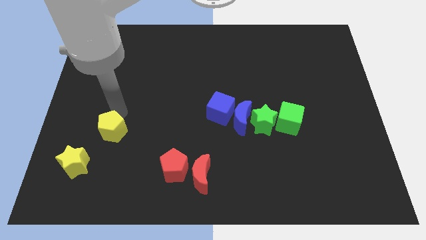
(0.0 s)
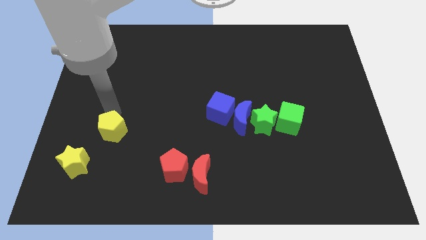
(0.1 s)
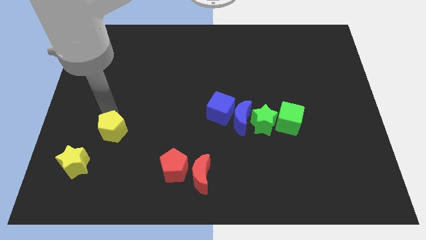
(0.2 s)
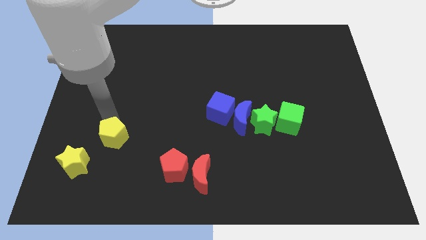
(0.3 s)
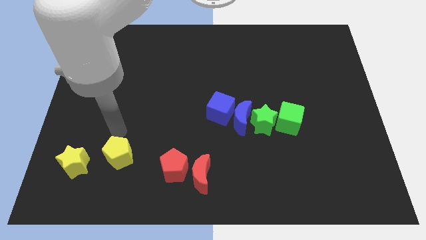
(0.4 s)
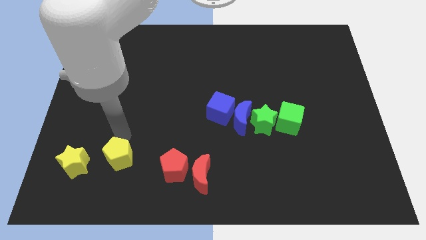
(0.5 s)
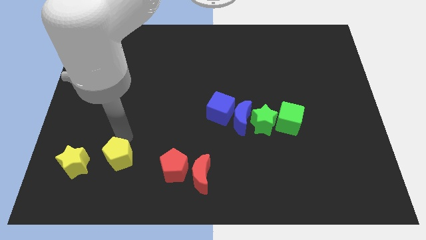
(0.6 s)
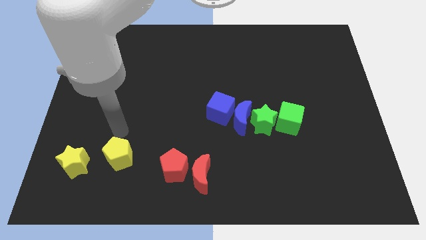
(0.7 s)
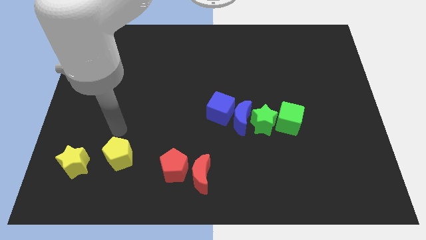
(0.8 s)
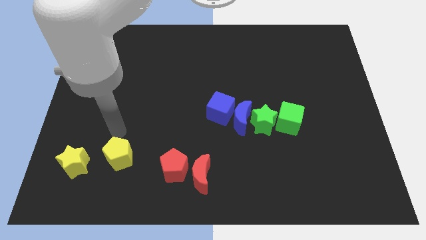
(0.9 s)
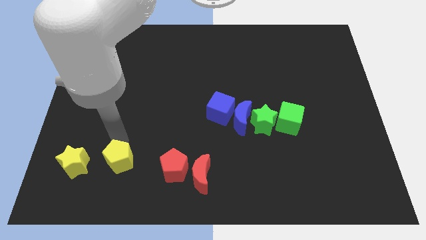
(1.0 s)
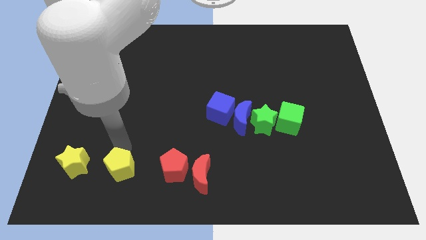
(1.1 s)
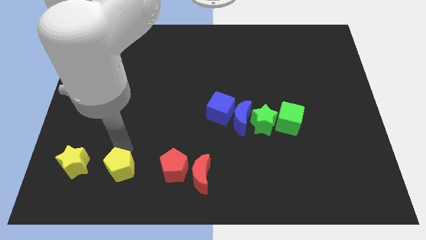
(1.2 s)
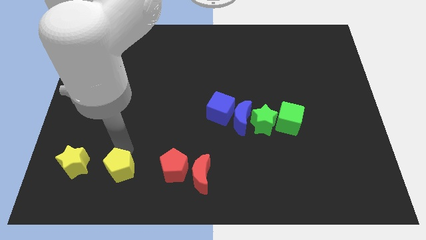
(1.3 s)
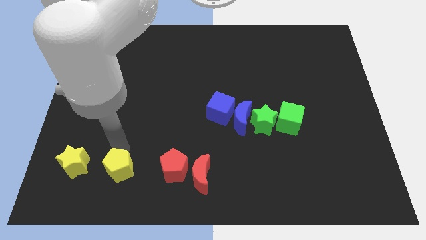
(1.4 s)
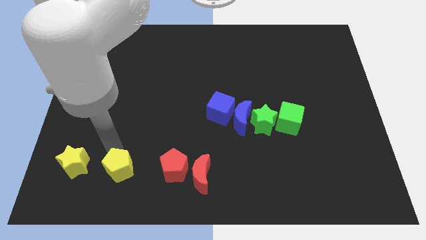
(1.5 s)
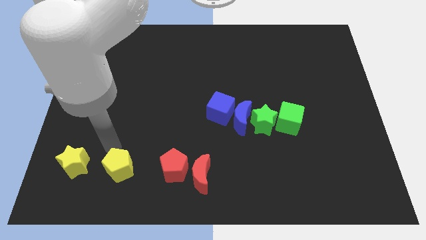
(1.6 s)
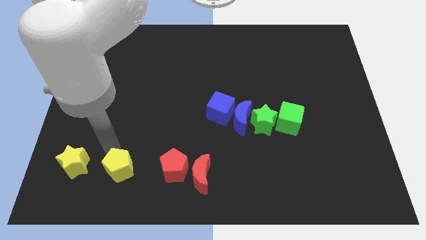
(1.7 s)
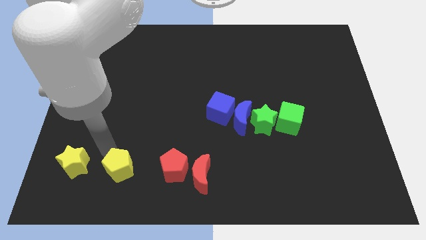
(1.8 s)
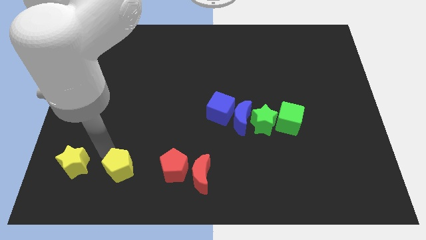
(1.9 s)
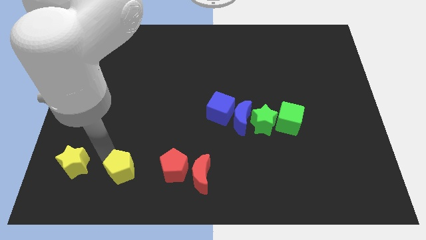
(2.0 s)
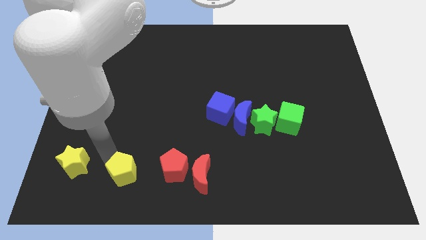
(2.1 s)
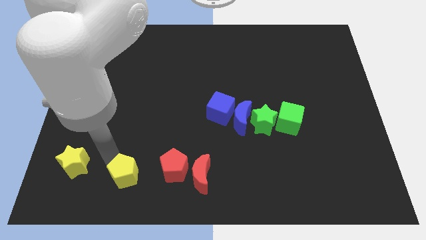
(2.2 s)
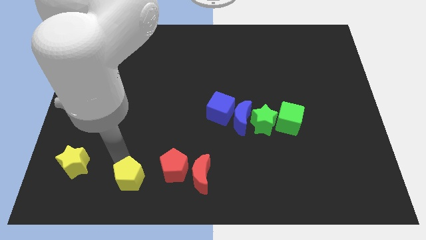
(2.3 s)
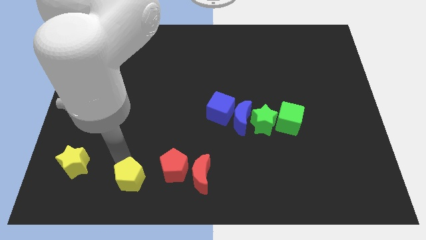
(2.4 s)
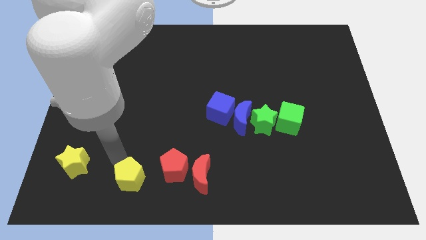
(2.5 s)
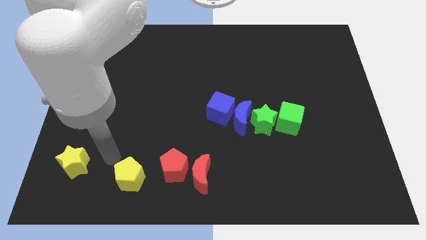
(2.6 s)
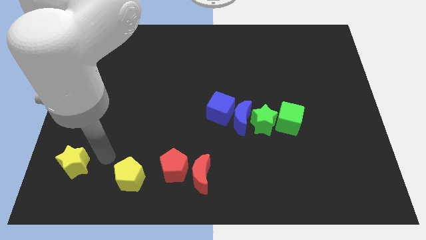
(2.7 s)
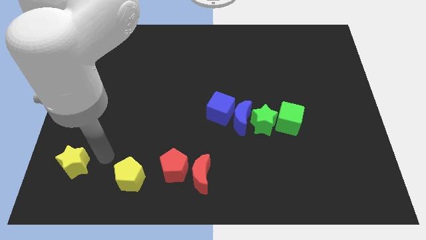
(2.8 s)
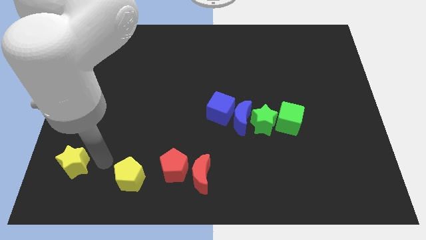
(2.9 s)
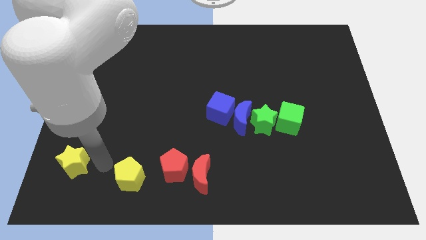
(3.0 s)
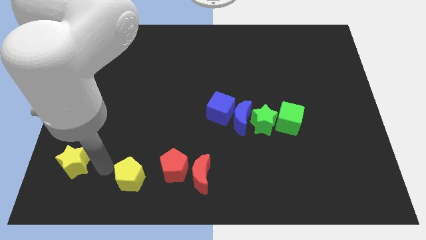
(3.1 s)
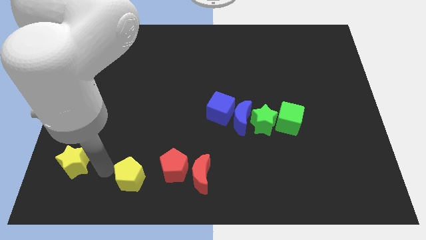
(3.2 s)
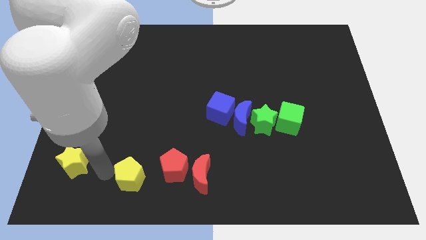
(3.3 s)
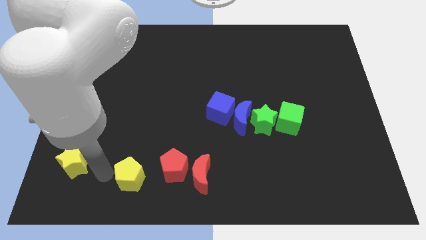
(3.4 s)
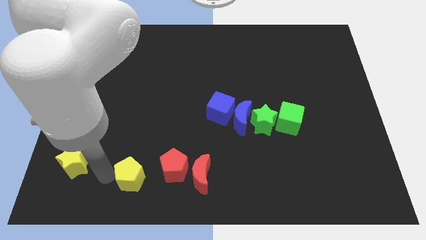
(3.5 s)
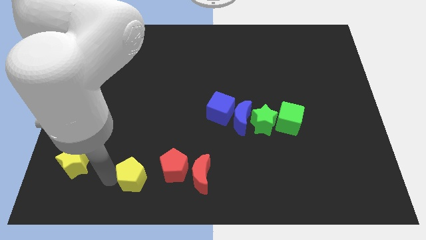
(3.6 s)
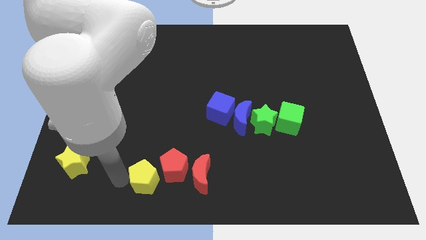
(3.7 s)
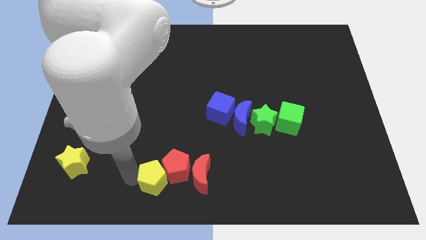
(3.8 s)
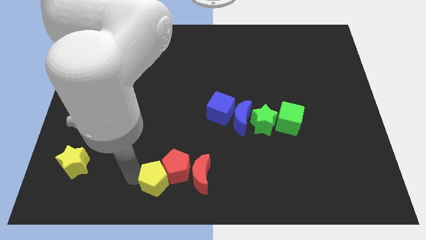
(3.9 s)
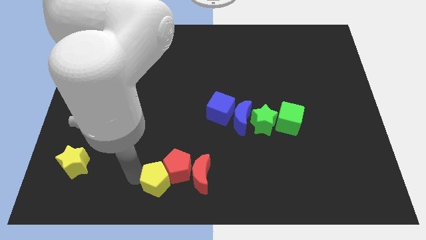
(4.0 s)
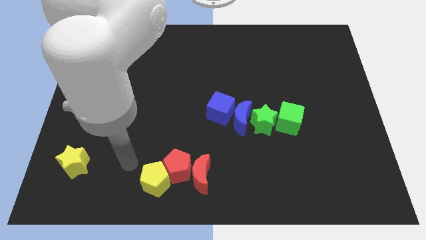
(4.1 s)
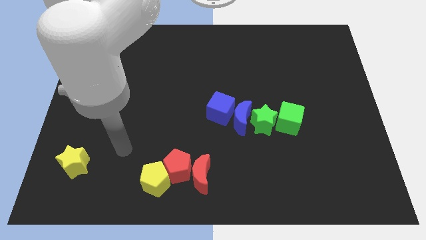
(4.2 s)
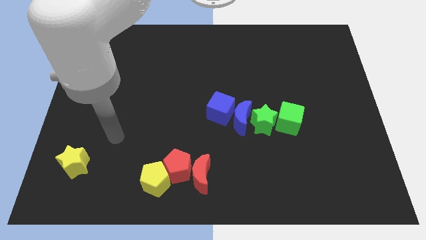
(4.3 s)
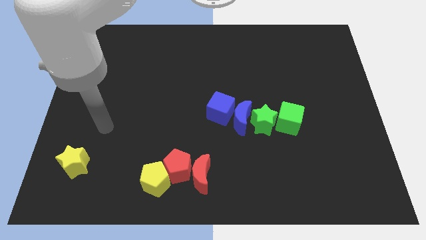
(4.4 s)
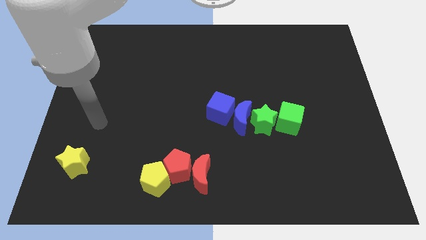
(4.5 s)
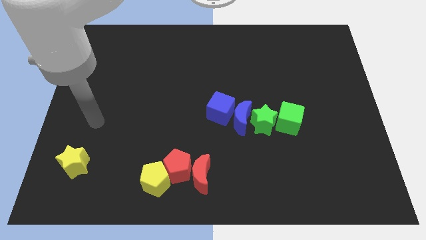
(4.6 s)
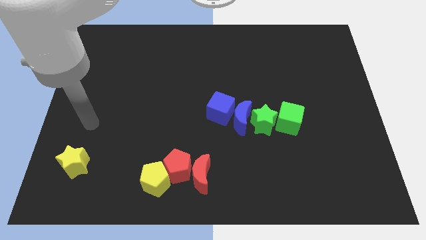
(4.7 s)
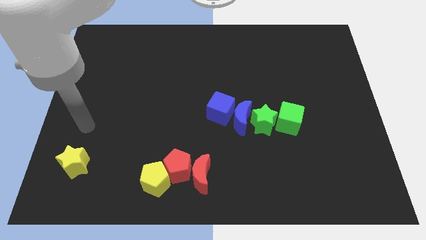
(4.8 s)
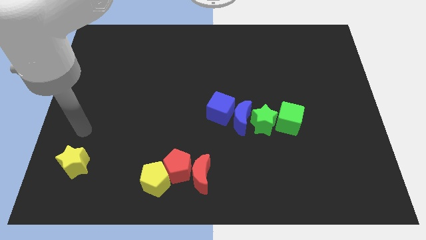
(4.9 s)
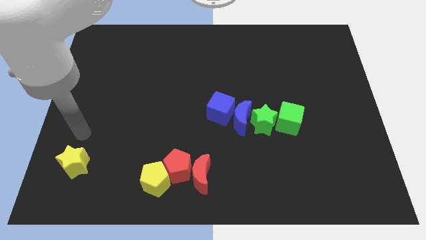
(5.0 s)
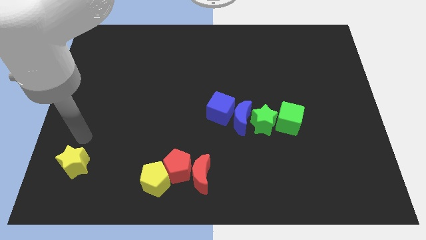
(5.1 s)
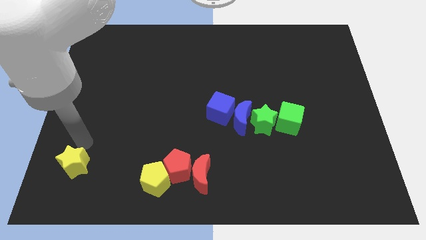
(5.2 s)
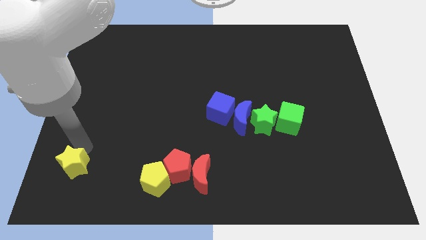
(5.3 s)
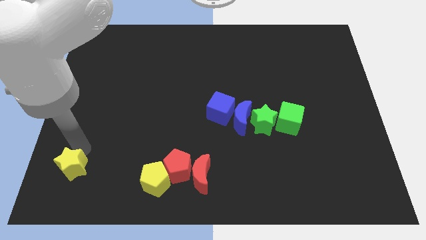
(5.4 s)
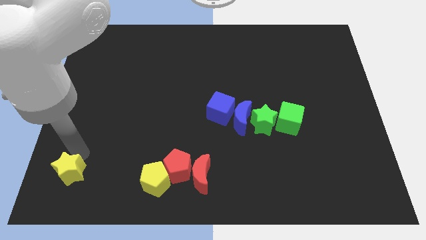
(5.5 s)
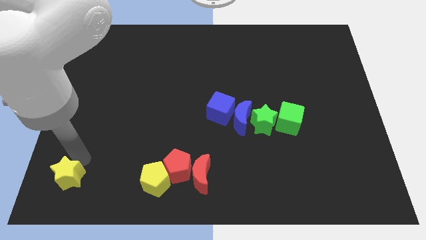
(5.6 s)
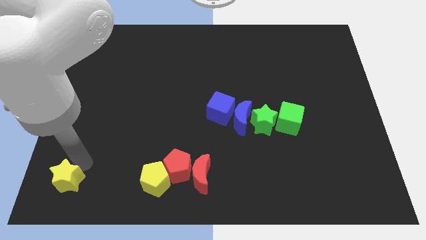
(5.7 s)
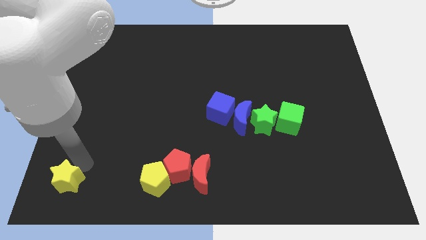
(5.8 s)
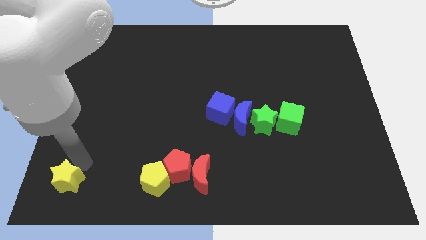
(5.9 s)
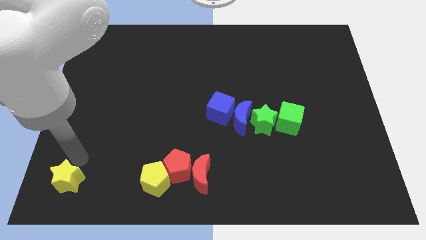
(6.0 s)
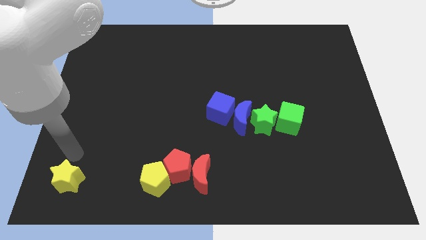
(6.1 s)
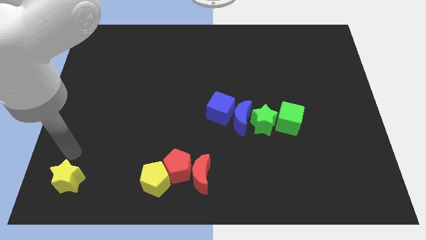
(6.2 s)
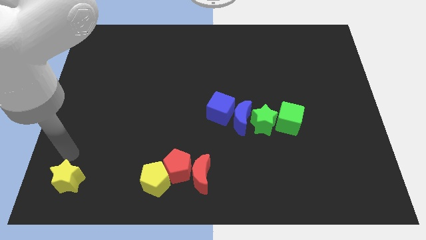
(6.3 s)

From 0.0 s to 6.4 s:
push the yellow star to the bottom side

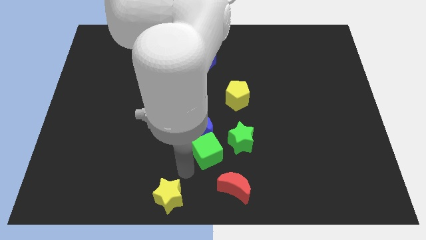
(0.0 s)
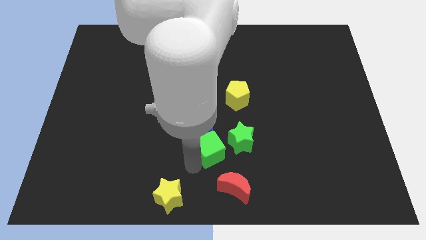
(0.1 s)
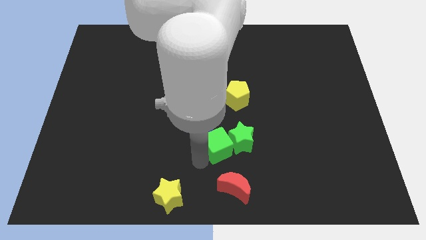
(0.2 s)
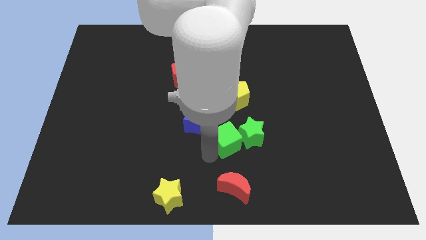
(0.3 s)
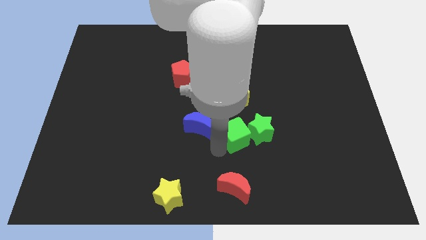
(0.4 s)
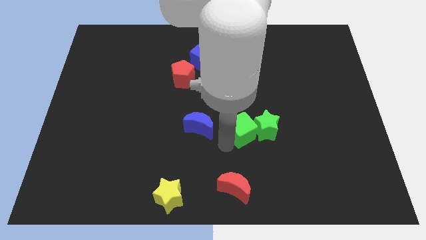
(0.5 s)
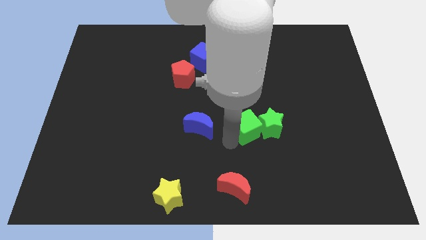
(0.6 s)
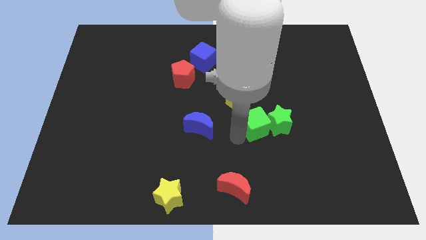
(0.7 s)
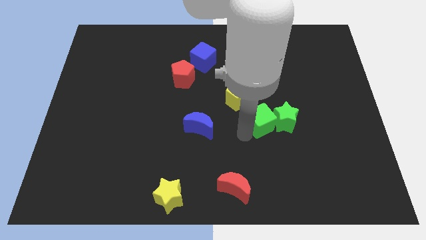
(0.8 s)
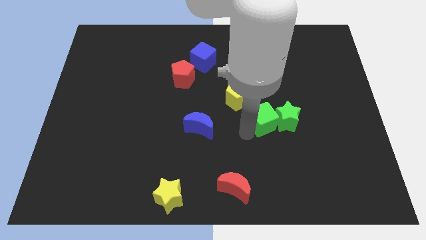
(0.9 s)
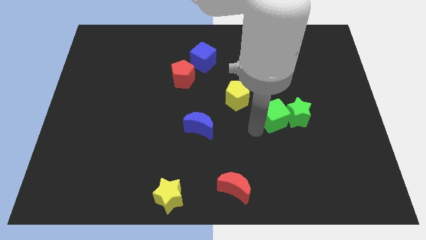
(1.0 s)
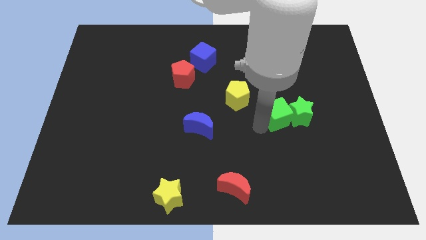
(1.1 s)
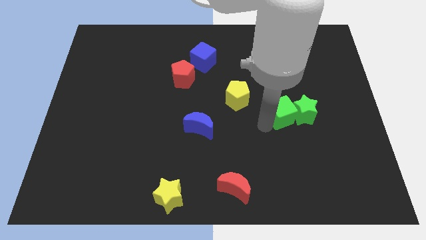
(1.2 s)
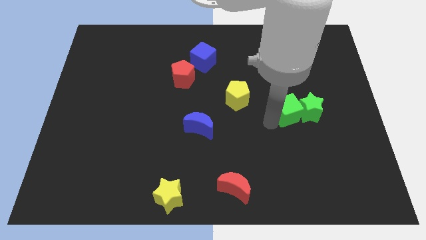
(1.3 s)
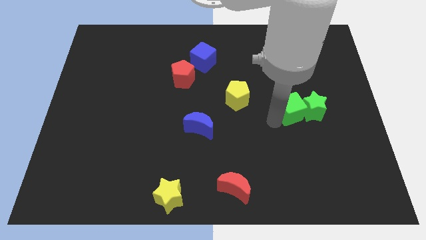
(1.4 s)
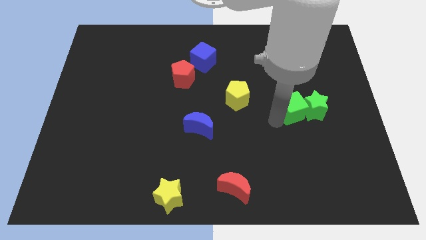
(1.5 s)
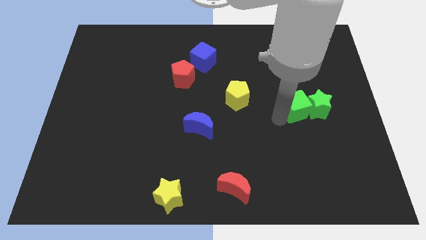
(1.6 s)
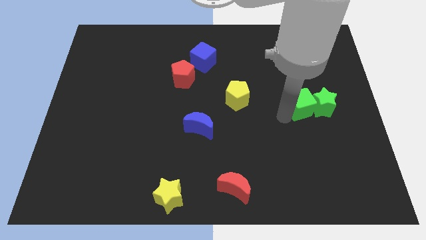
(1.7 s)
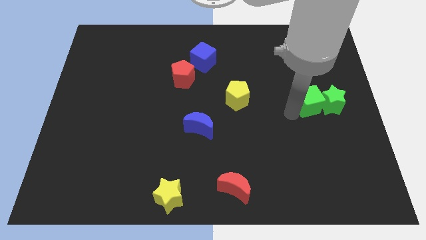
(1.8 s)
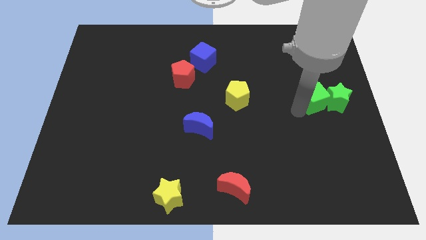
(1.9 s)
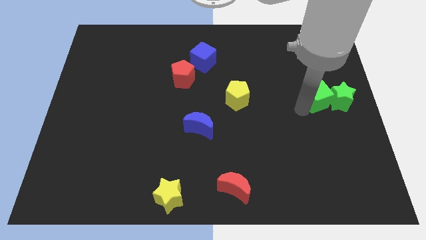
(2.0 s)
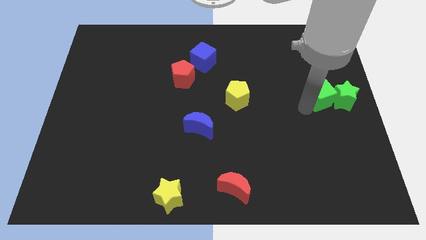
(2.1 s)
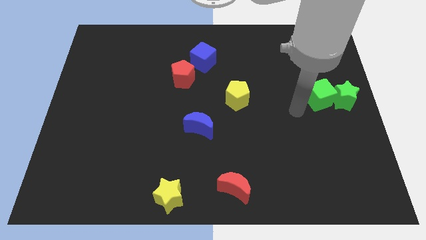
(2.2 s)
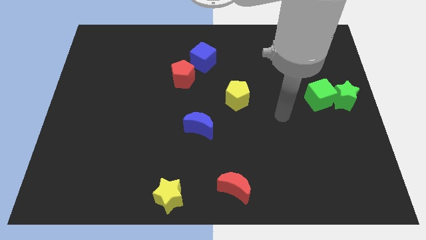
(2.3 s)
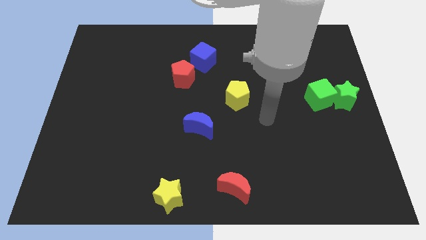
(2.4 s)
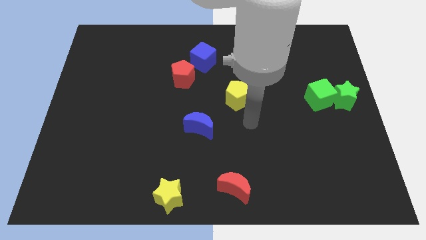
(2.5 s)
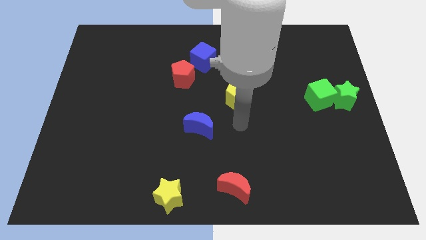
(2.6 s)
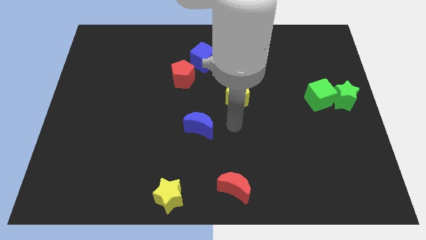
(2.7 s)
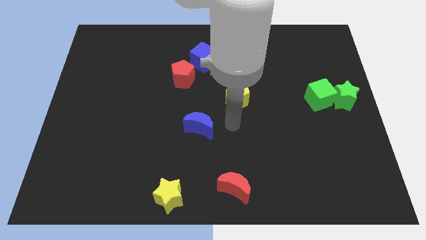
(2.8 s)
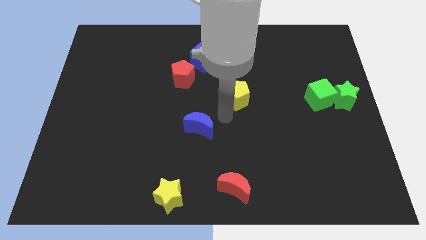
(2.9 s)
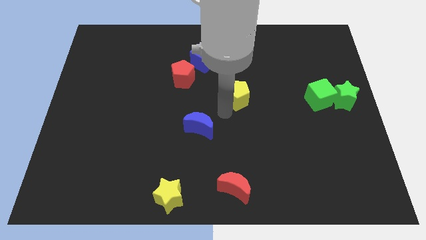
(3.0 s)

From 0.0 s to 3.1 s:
place both the green blocks at the center right
